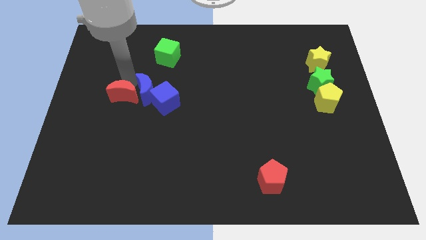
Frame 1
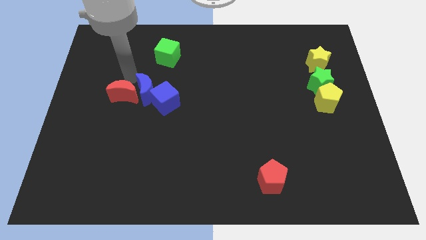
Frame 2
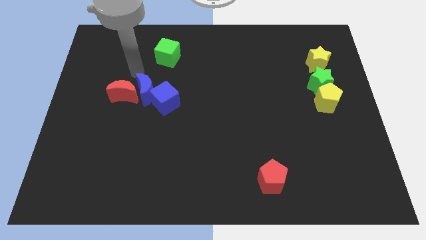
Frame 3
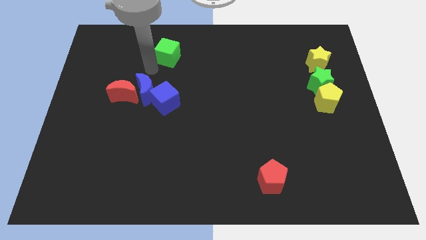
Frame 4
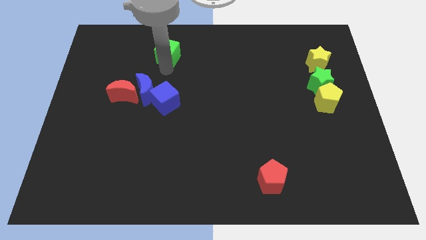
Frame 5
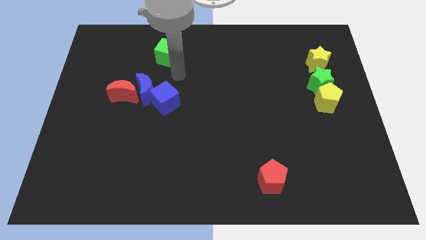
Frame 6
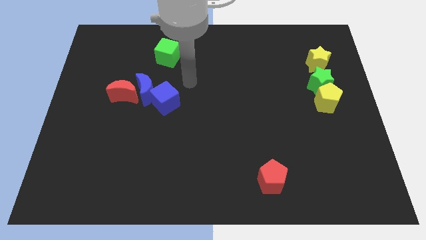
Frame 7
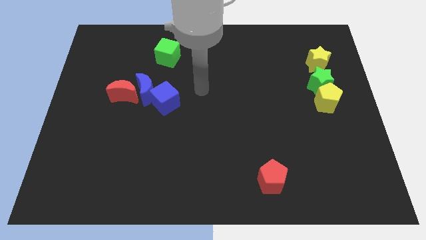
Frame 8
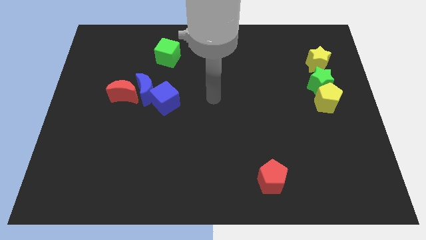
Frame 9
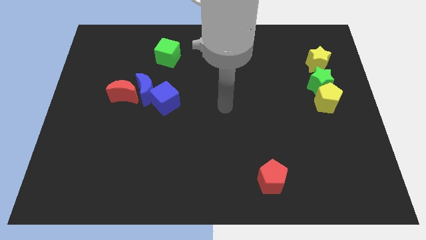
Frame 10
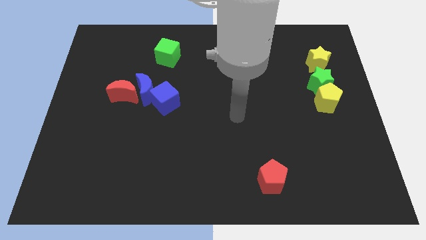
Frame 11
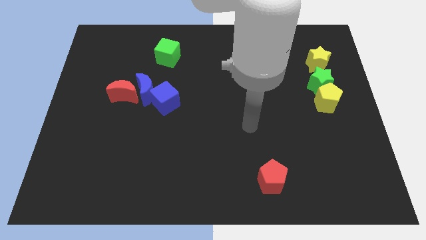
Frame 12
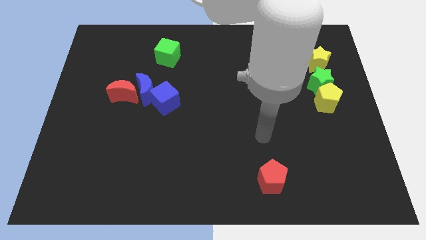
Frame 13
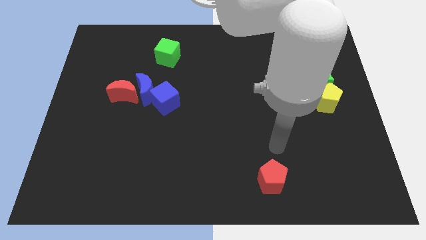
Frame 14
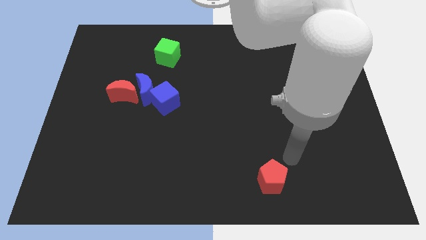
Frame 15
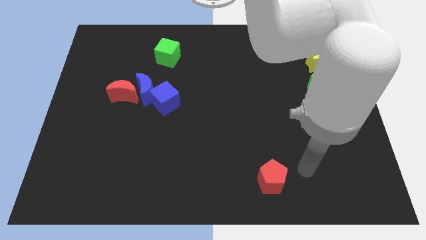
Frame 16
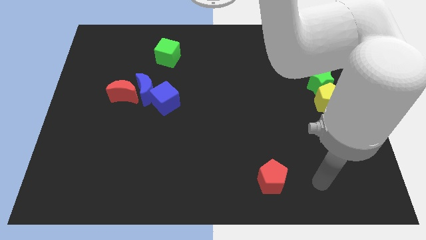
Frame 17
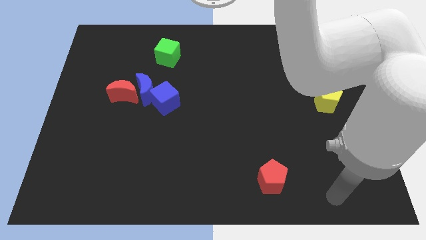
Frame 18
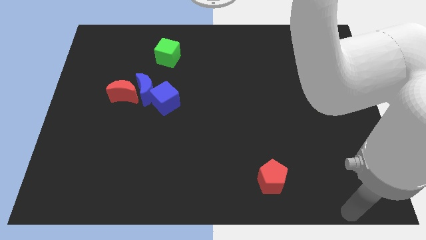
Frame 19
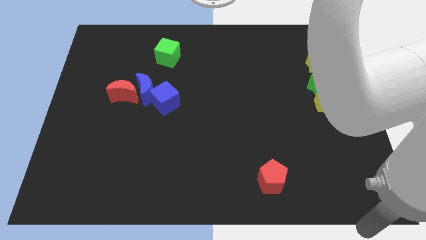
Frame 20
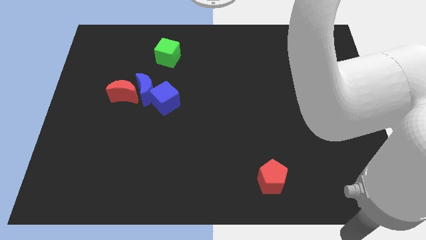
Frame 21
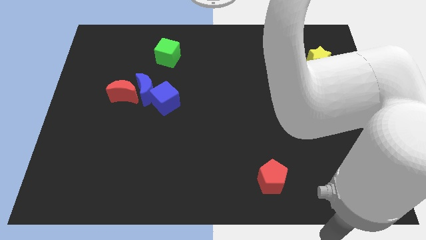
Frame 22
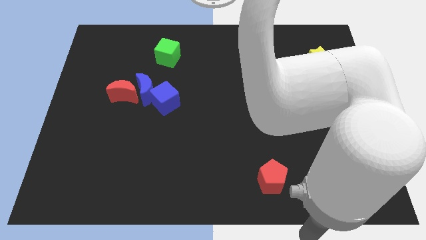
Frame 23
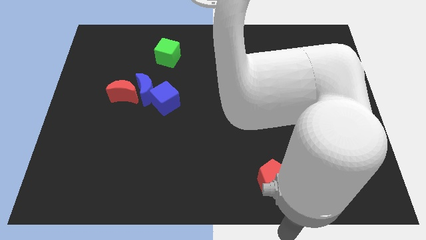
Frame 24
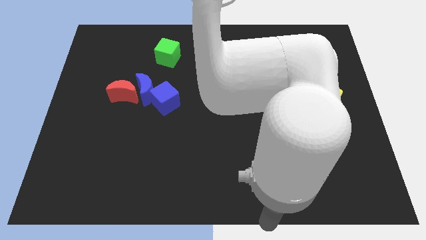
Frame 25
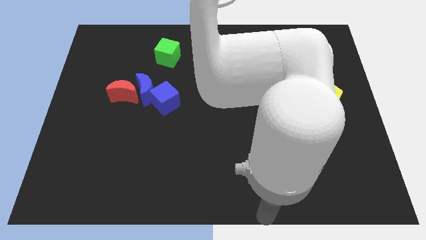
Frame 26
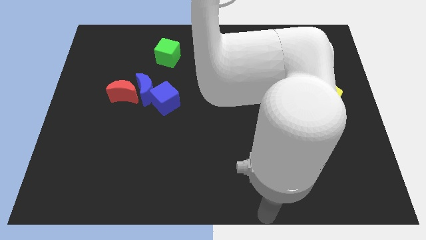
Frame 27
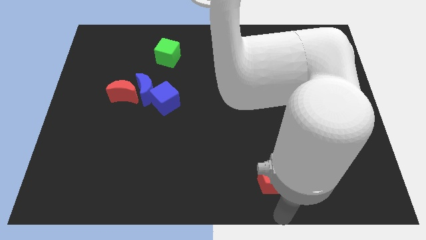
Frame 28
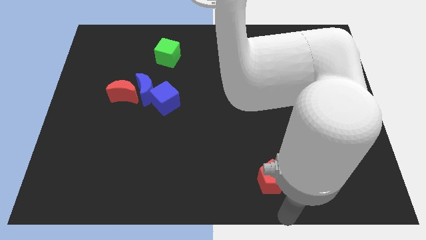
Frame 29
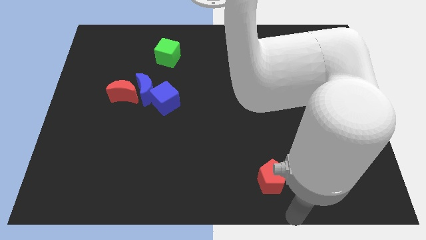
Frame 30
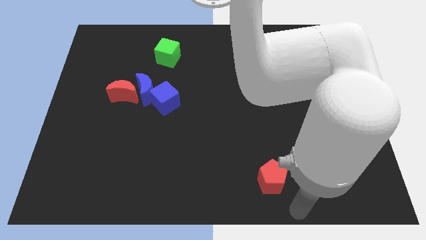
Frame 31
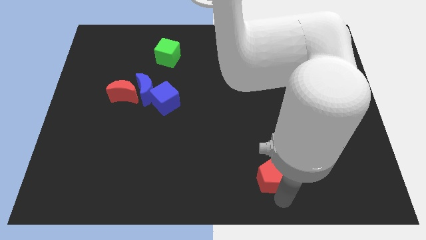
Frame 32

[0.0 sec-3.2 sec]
move your arm towards the bottom right side of the red pentagon

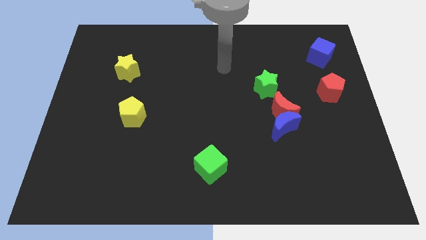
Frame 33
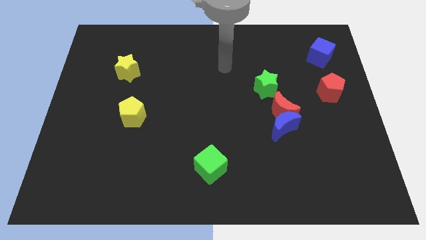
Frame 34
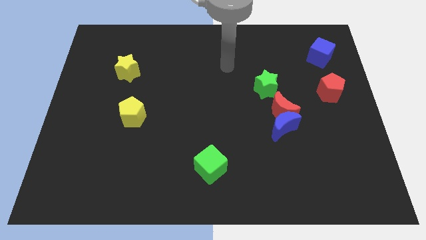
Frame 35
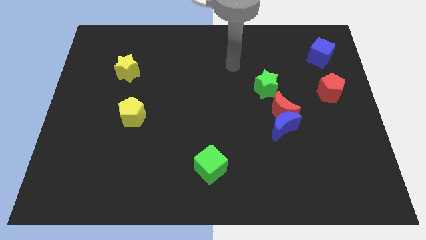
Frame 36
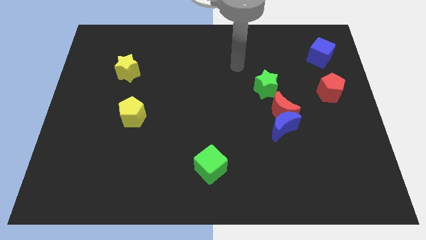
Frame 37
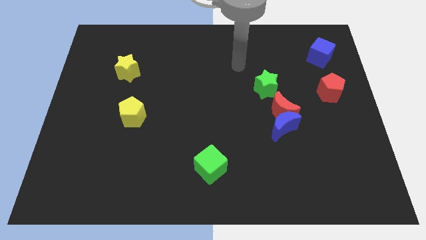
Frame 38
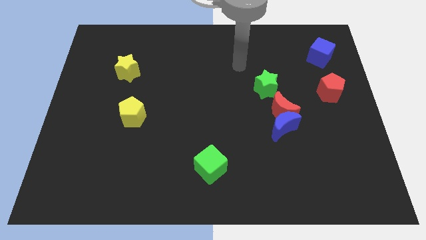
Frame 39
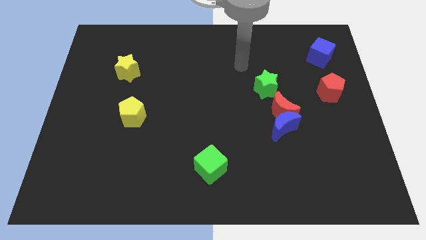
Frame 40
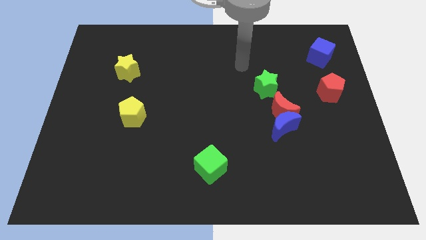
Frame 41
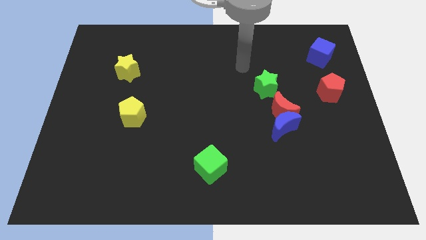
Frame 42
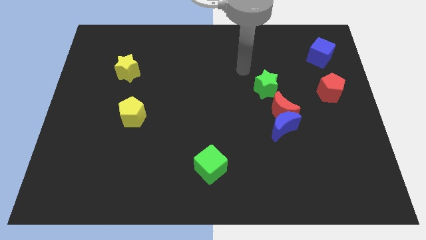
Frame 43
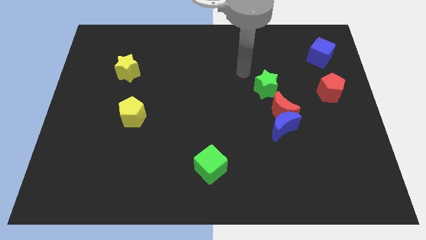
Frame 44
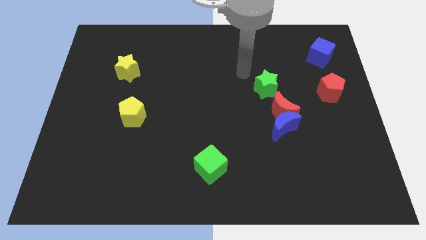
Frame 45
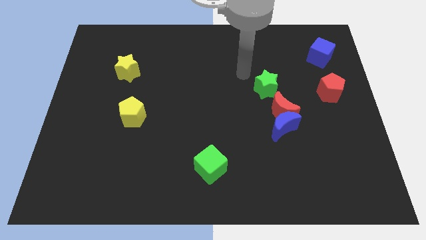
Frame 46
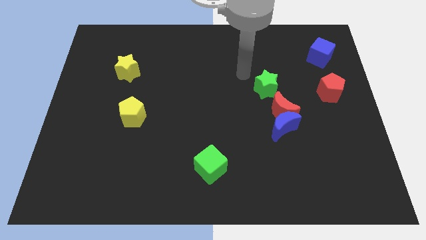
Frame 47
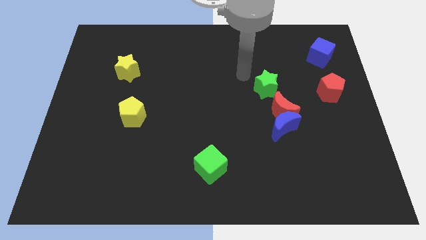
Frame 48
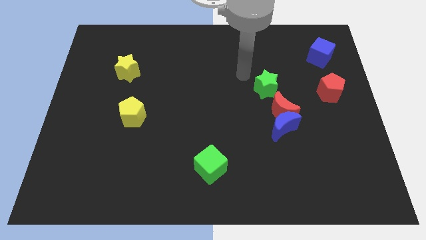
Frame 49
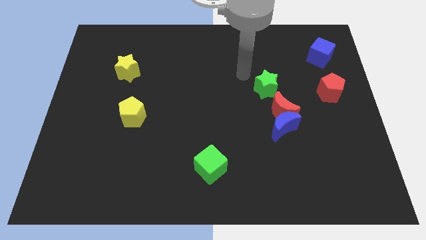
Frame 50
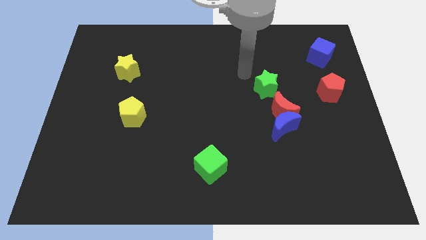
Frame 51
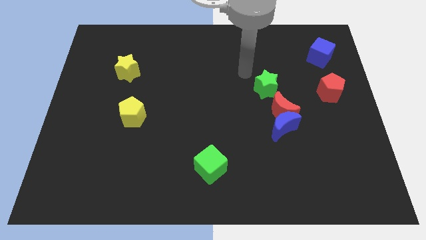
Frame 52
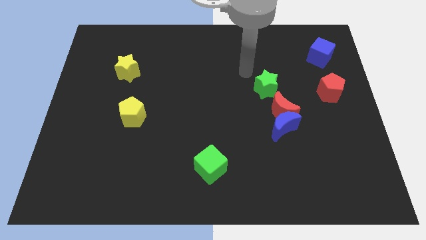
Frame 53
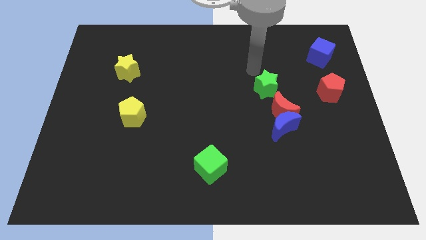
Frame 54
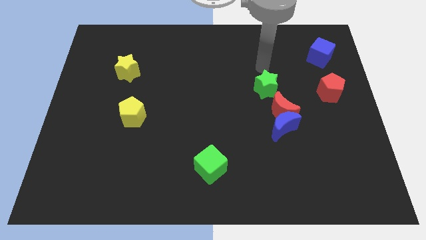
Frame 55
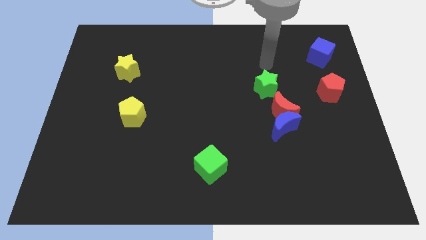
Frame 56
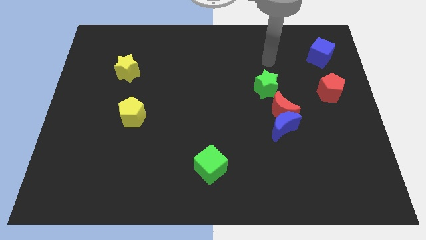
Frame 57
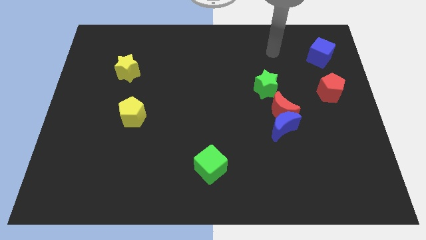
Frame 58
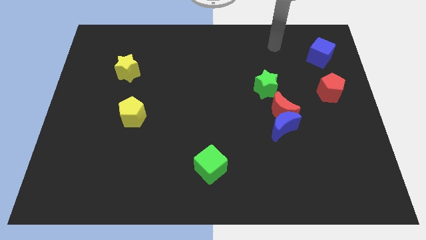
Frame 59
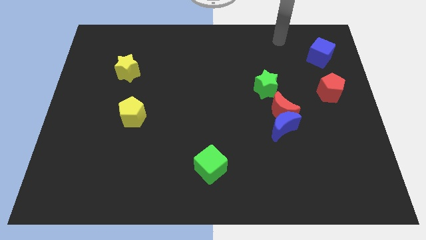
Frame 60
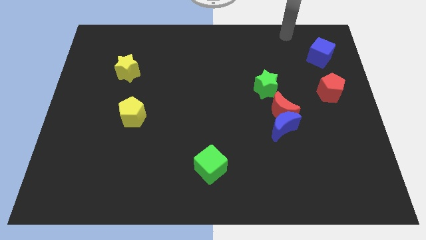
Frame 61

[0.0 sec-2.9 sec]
place your arm at the top left of the blue cube

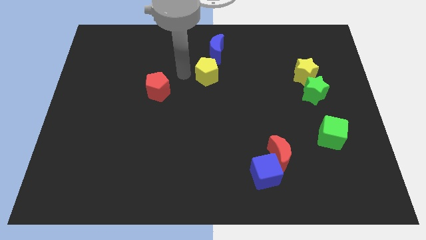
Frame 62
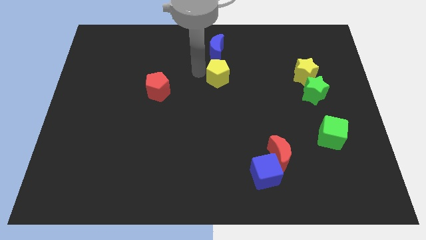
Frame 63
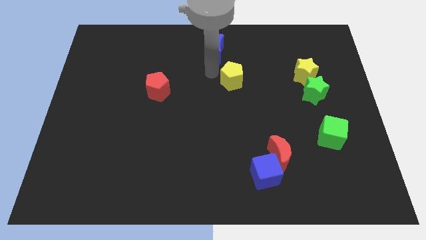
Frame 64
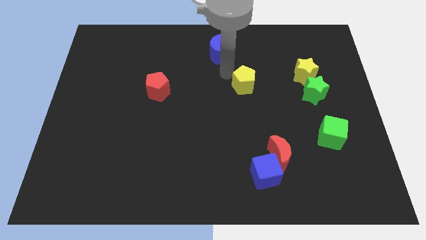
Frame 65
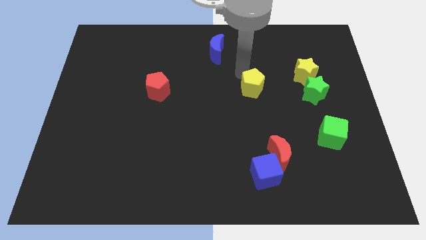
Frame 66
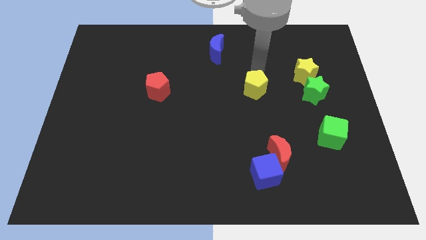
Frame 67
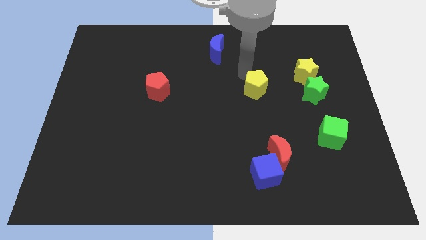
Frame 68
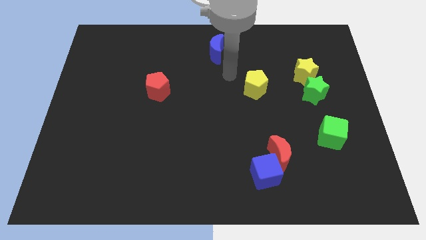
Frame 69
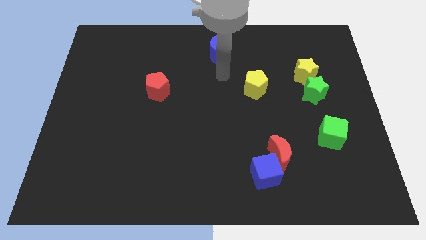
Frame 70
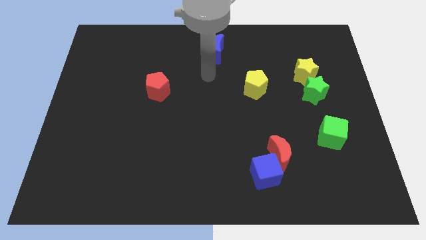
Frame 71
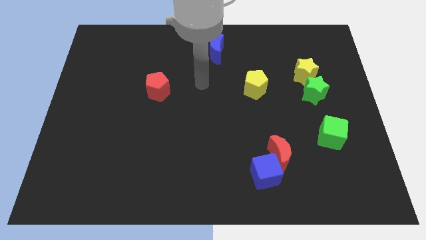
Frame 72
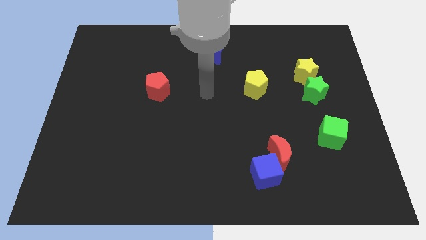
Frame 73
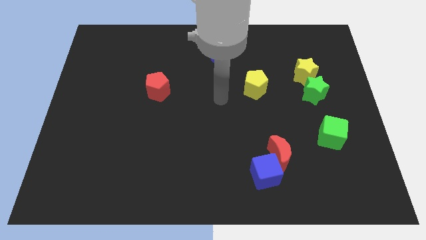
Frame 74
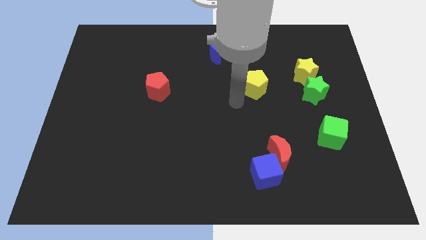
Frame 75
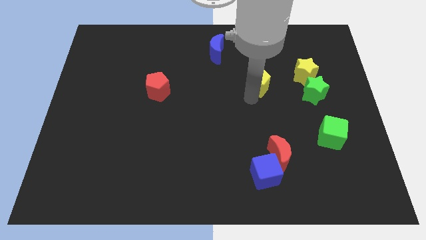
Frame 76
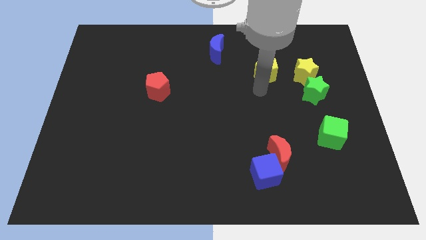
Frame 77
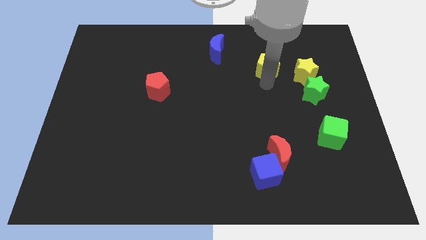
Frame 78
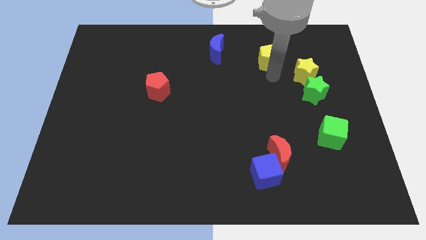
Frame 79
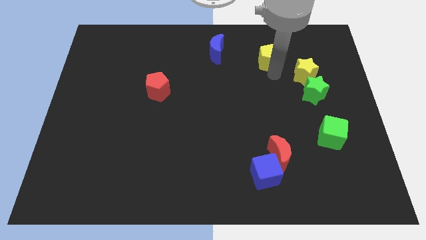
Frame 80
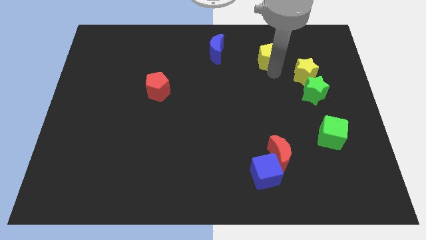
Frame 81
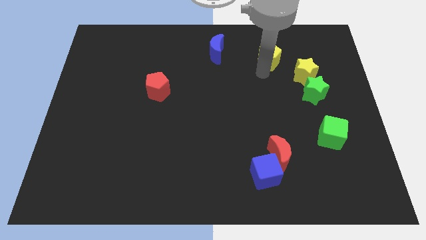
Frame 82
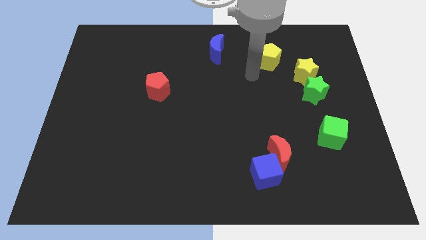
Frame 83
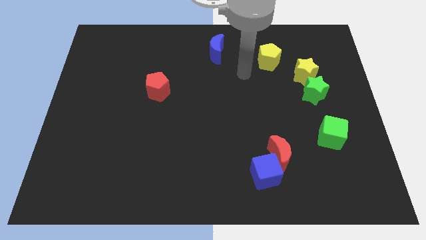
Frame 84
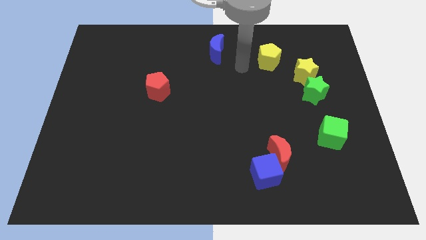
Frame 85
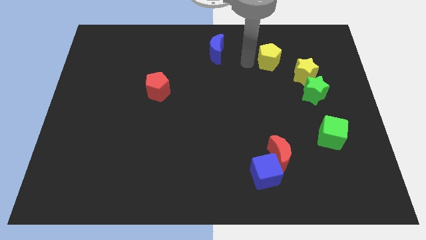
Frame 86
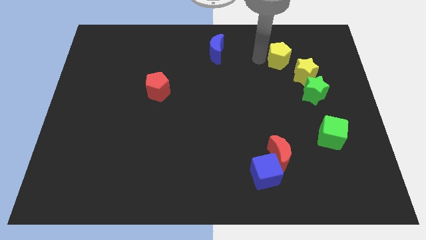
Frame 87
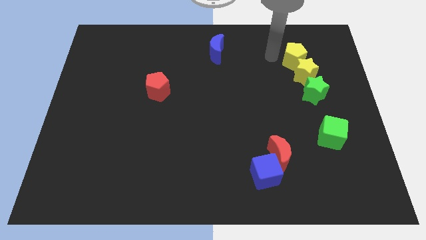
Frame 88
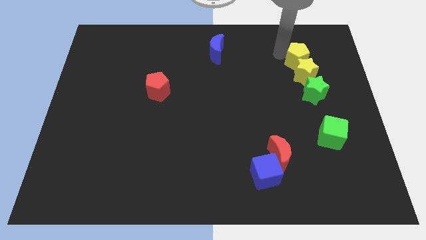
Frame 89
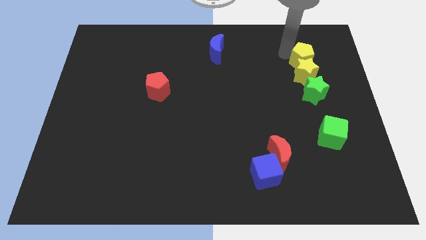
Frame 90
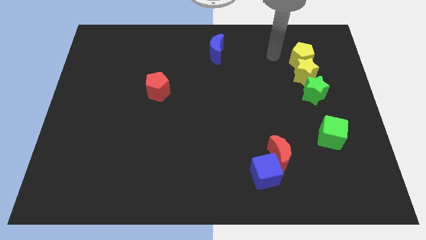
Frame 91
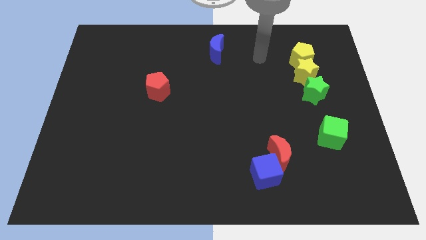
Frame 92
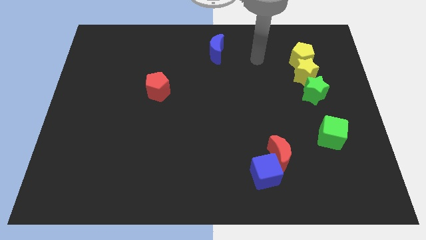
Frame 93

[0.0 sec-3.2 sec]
place the yellow pentagon above the yellow star
